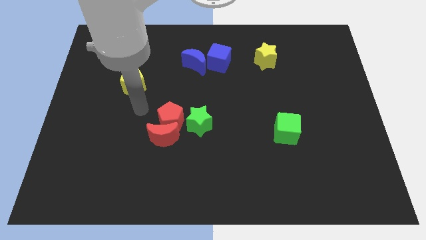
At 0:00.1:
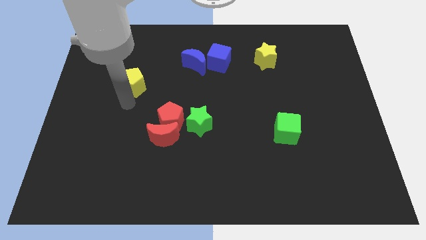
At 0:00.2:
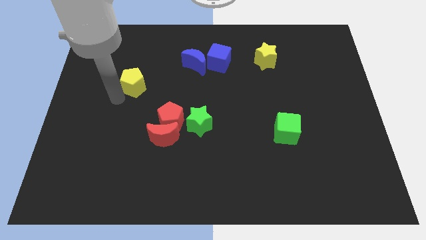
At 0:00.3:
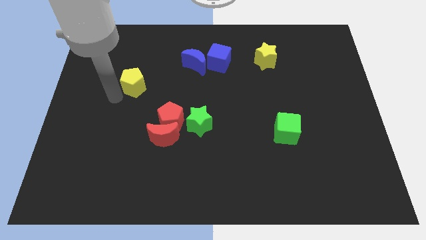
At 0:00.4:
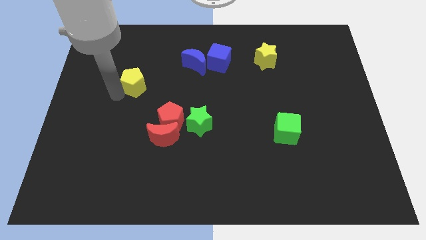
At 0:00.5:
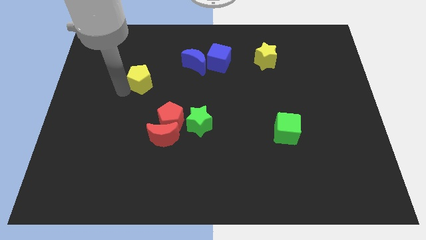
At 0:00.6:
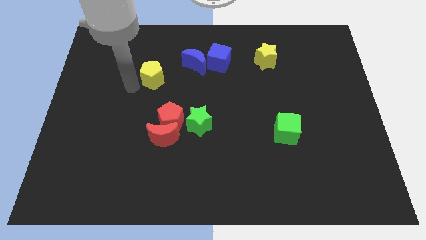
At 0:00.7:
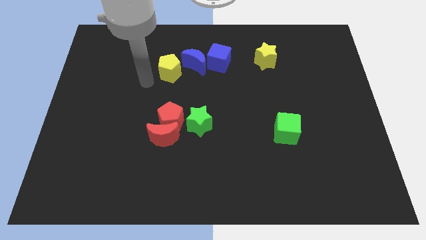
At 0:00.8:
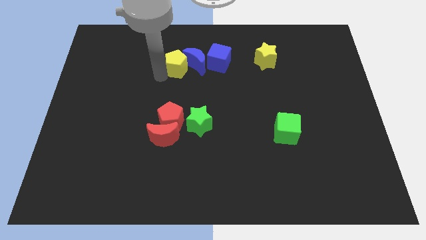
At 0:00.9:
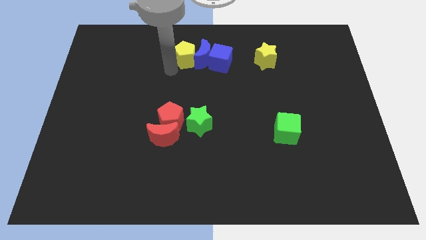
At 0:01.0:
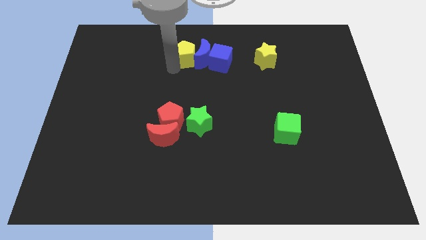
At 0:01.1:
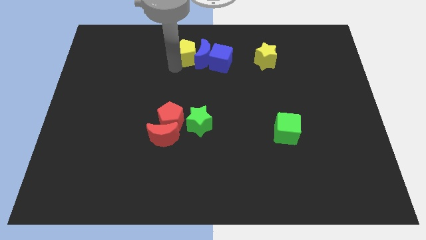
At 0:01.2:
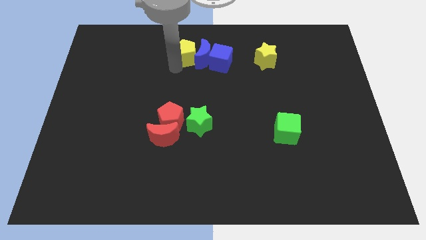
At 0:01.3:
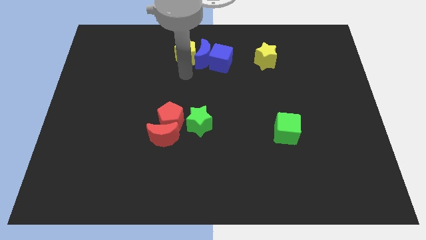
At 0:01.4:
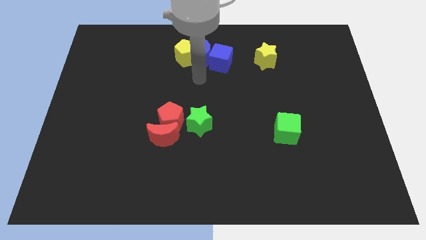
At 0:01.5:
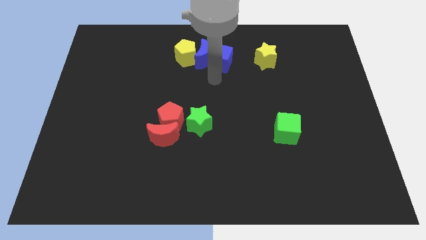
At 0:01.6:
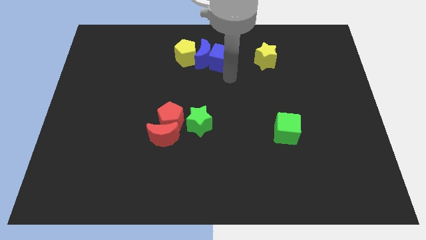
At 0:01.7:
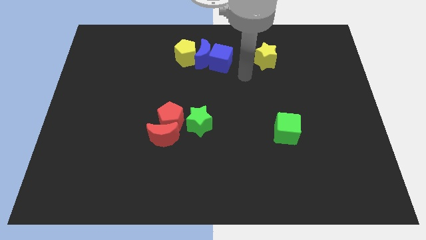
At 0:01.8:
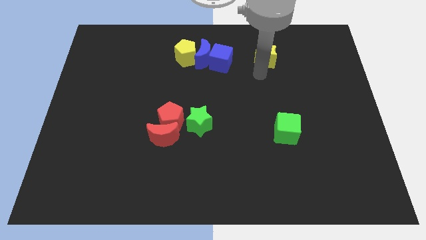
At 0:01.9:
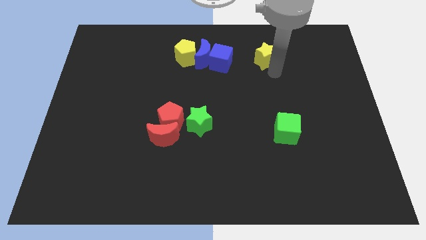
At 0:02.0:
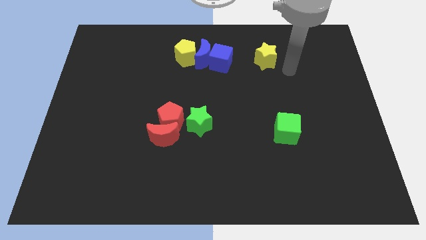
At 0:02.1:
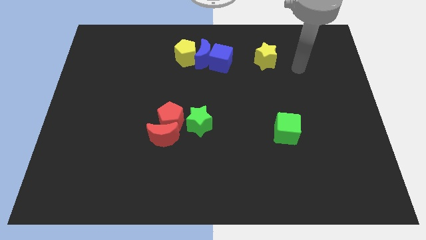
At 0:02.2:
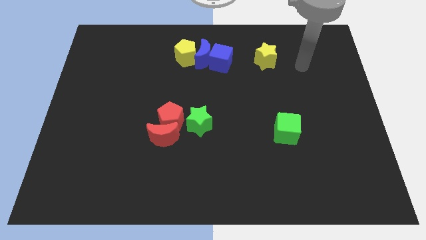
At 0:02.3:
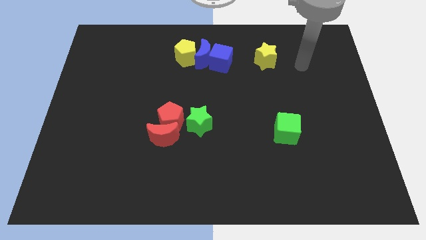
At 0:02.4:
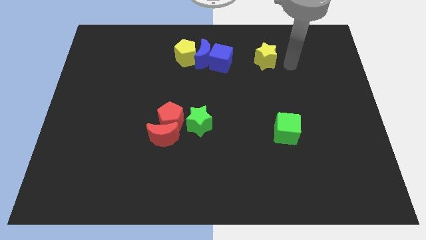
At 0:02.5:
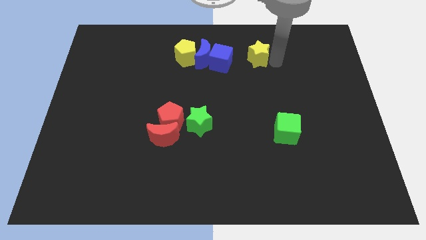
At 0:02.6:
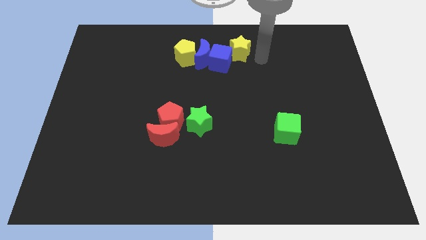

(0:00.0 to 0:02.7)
move the yellow pentagon into the blue blocks

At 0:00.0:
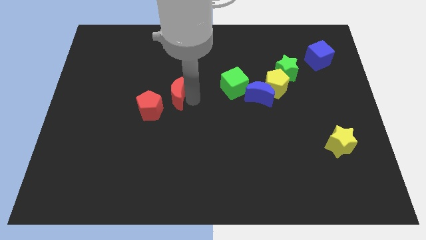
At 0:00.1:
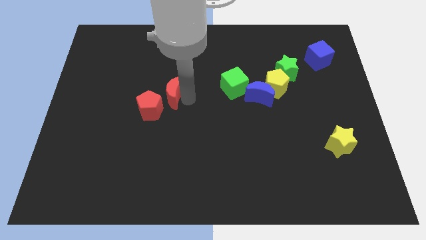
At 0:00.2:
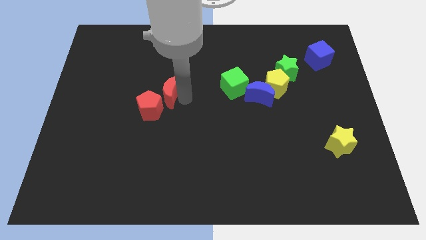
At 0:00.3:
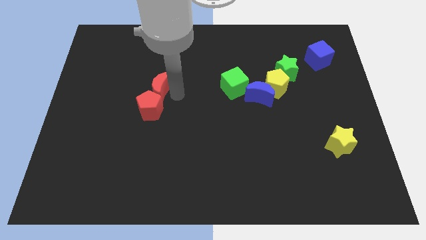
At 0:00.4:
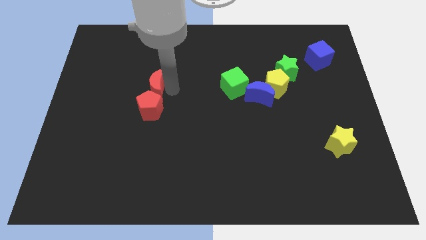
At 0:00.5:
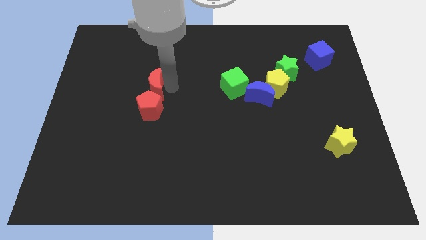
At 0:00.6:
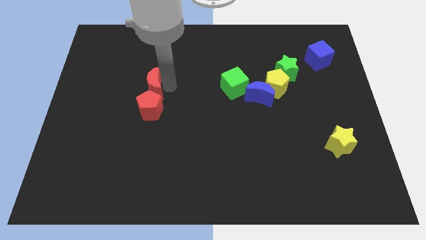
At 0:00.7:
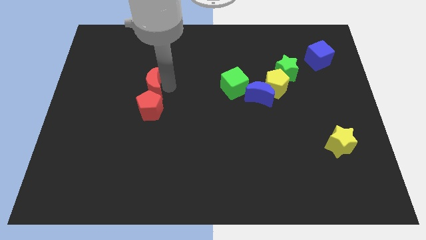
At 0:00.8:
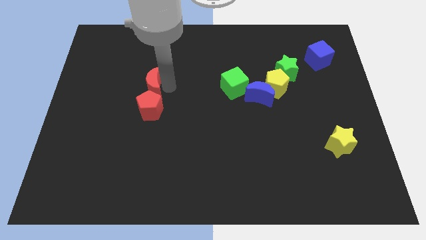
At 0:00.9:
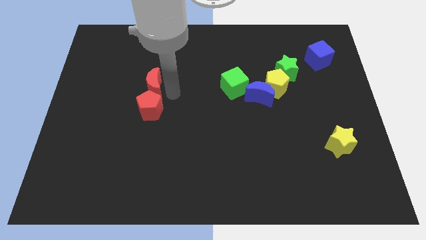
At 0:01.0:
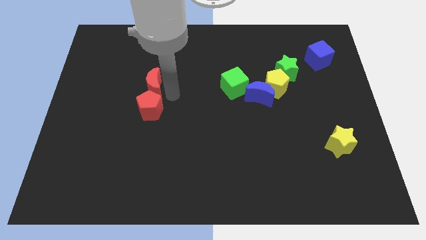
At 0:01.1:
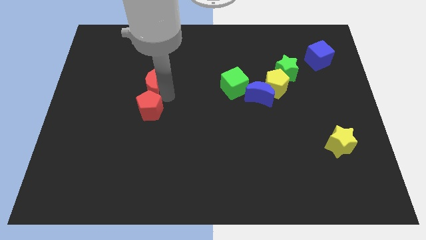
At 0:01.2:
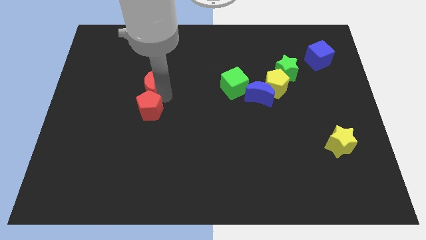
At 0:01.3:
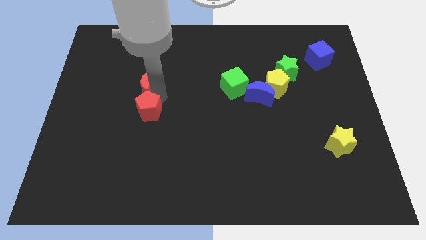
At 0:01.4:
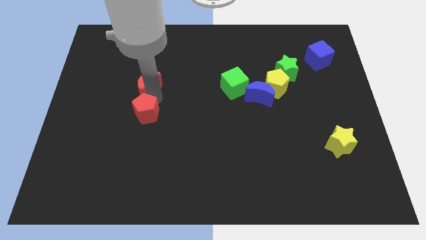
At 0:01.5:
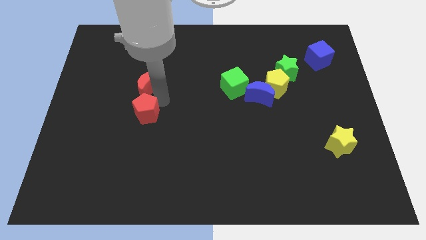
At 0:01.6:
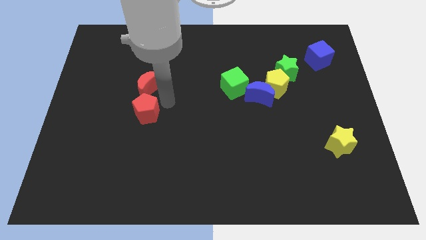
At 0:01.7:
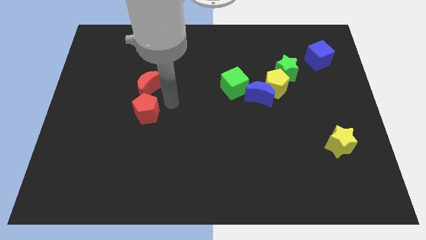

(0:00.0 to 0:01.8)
push the red crecent to the top side of the red pentagon

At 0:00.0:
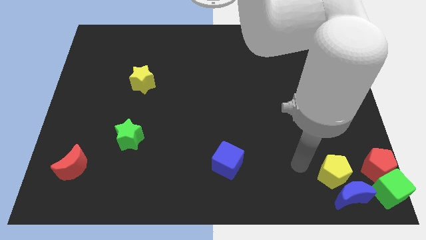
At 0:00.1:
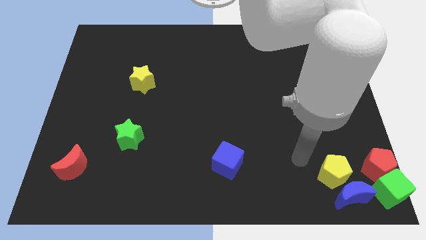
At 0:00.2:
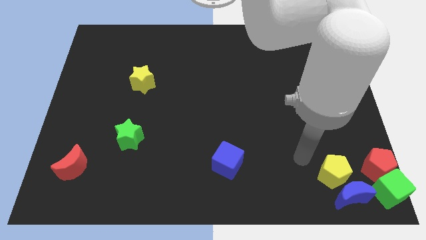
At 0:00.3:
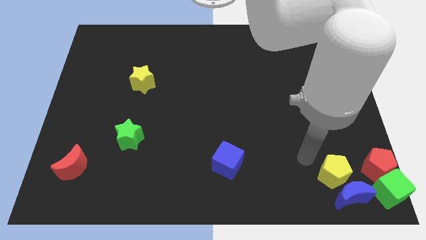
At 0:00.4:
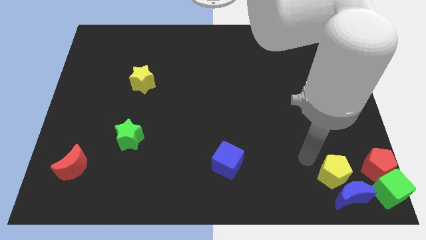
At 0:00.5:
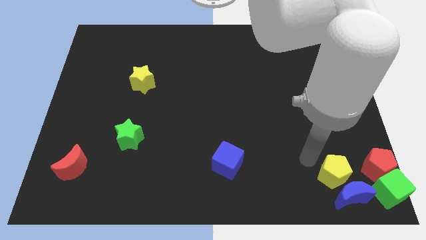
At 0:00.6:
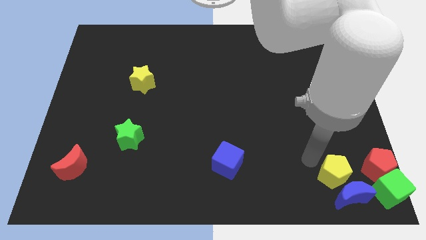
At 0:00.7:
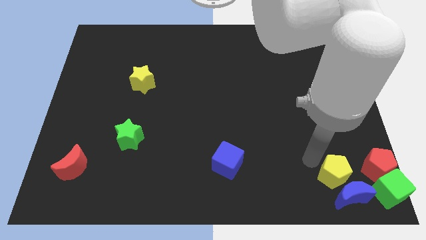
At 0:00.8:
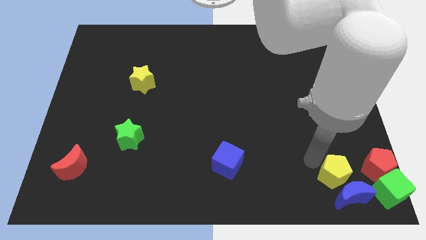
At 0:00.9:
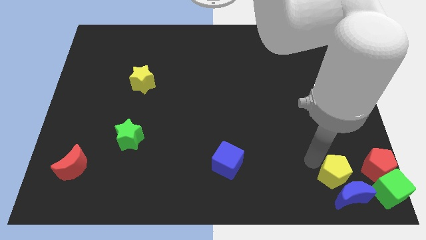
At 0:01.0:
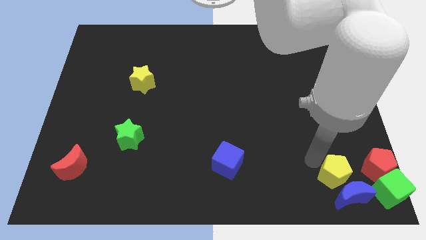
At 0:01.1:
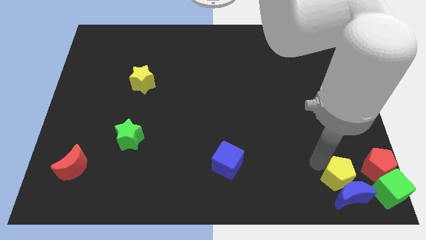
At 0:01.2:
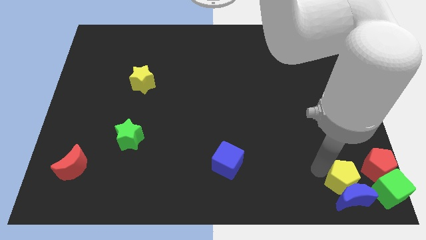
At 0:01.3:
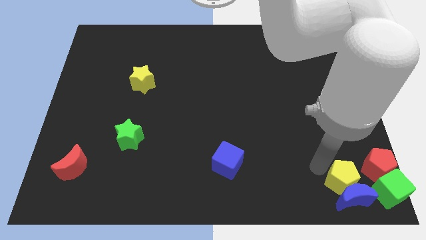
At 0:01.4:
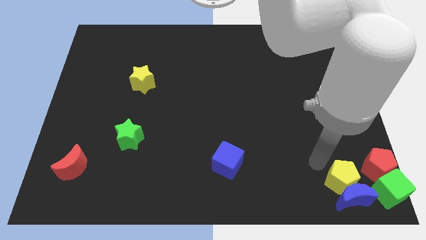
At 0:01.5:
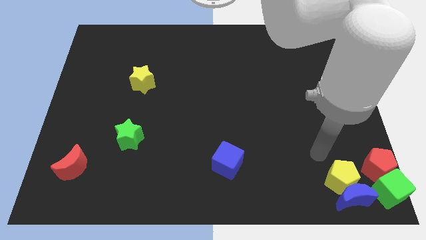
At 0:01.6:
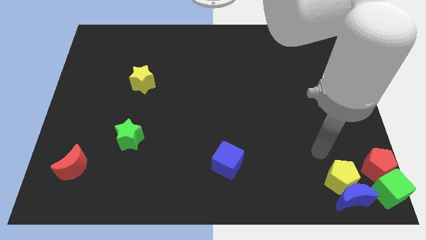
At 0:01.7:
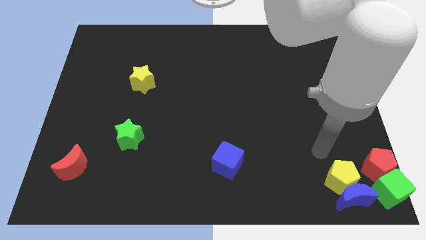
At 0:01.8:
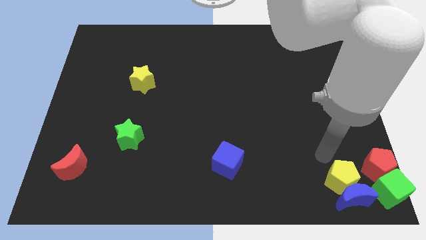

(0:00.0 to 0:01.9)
move yellow pentagon into blue moon

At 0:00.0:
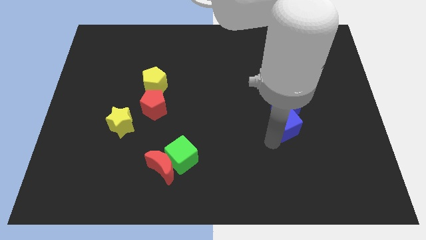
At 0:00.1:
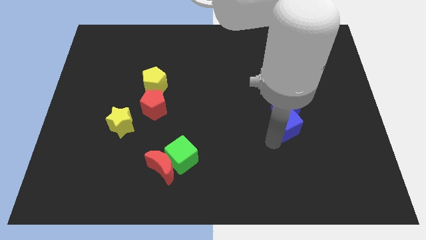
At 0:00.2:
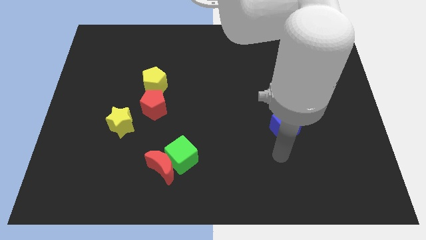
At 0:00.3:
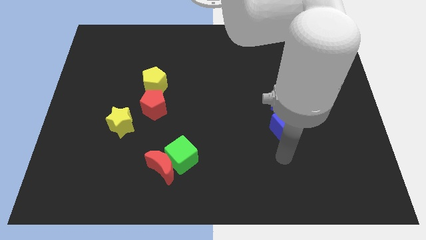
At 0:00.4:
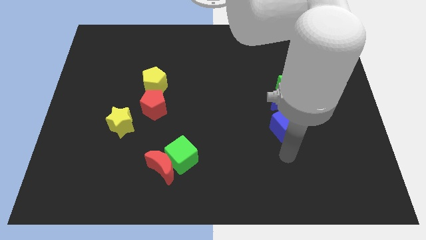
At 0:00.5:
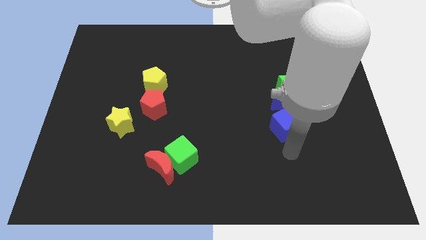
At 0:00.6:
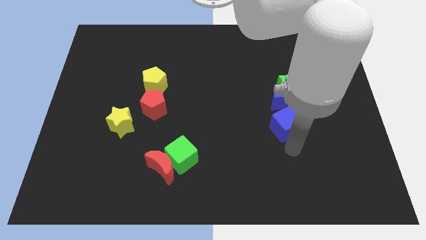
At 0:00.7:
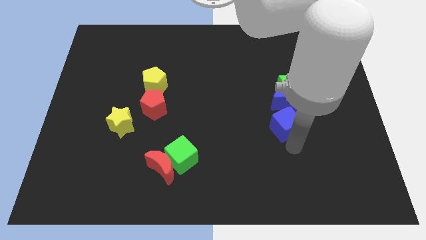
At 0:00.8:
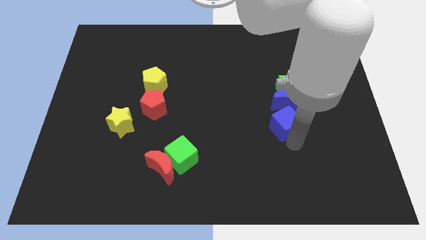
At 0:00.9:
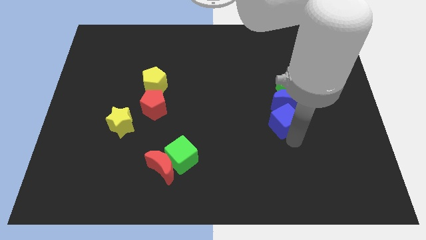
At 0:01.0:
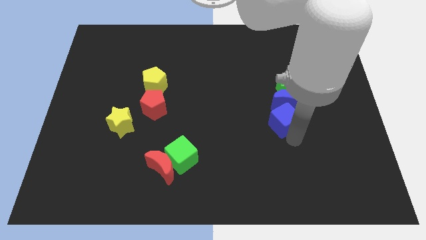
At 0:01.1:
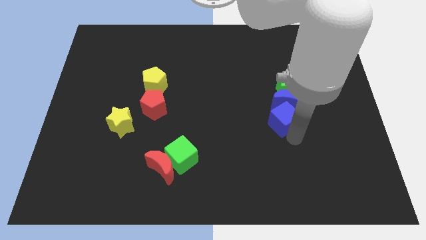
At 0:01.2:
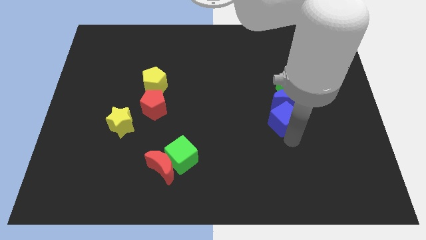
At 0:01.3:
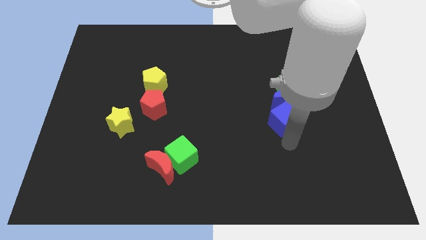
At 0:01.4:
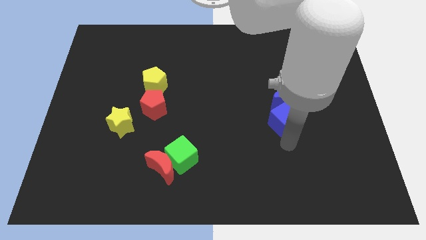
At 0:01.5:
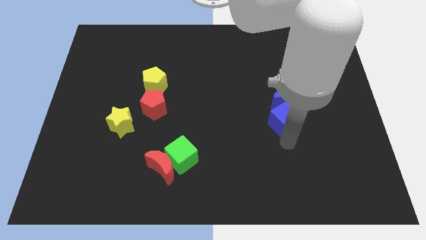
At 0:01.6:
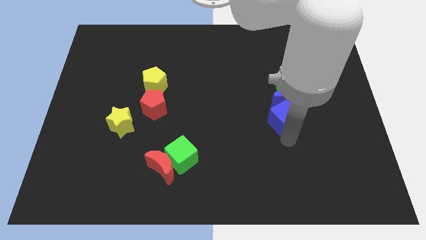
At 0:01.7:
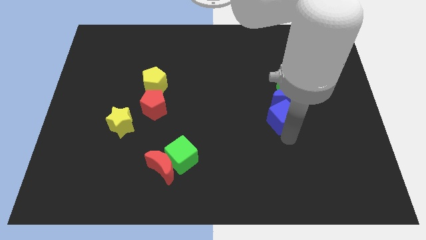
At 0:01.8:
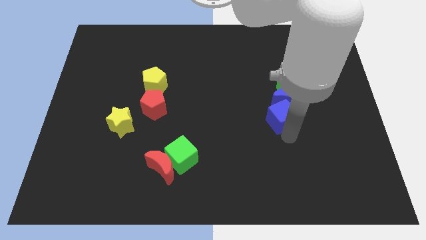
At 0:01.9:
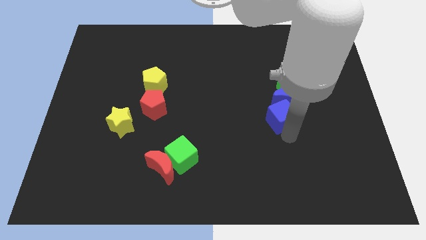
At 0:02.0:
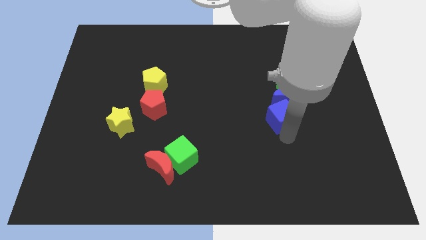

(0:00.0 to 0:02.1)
push the blue cube close to the blue crescent

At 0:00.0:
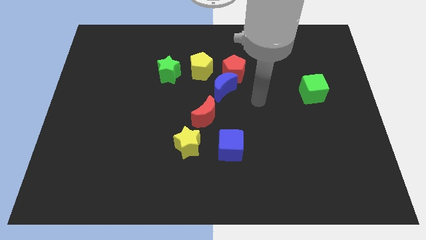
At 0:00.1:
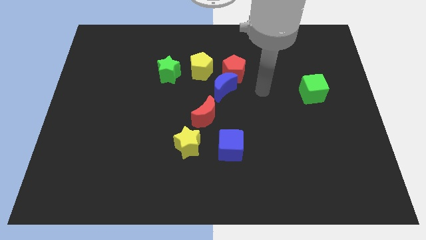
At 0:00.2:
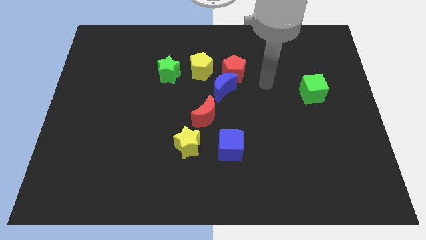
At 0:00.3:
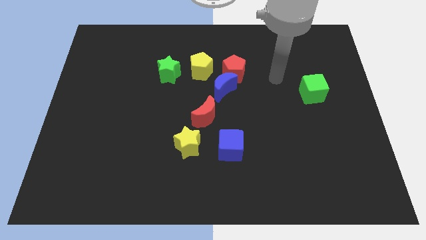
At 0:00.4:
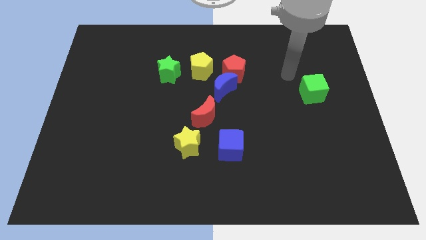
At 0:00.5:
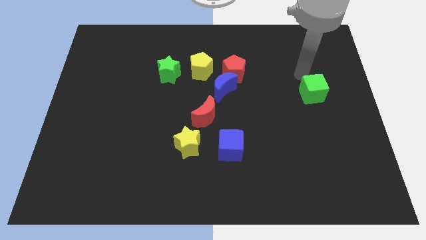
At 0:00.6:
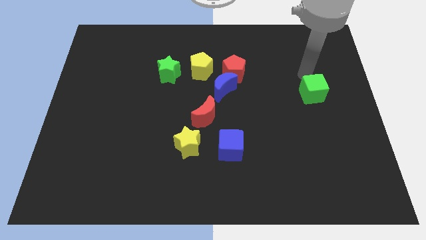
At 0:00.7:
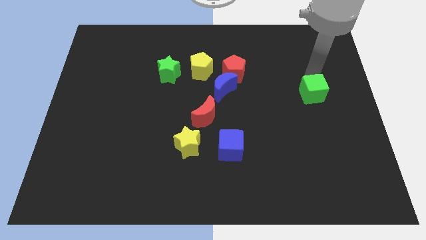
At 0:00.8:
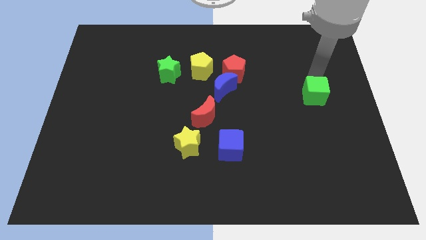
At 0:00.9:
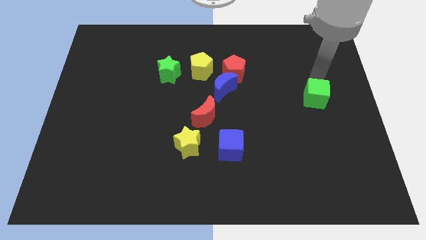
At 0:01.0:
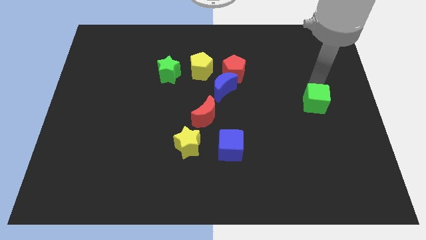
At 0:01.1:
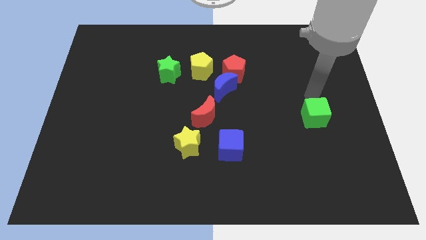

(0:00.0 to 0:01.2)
move the green cube towards the bottom
